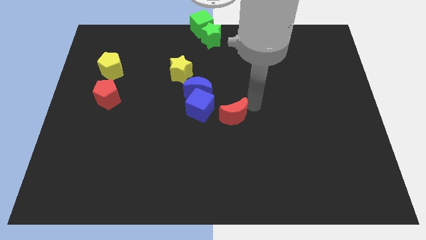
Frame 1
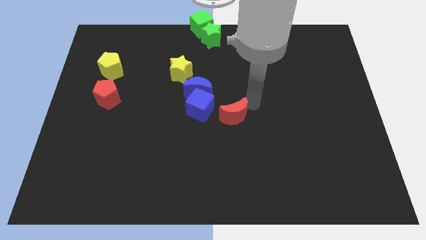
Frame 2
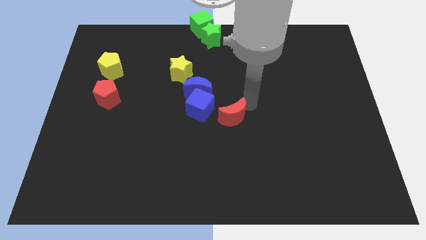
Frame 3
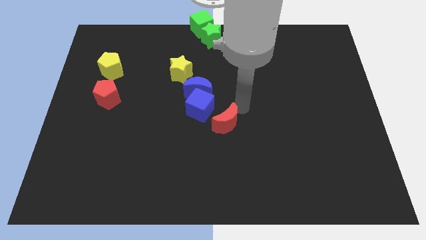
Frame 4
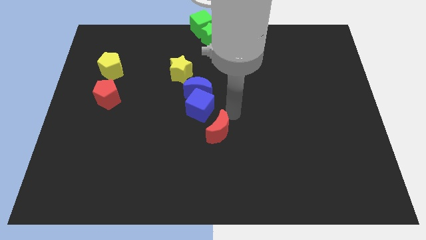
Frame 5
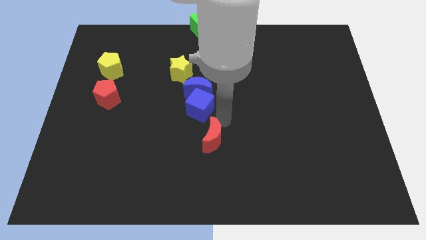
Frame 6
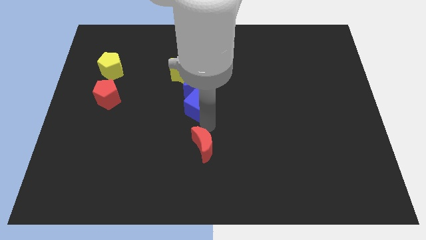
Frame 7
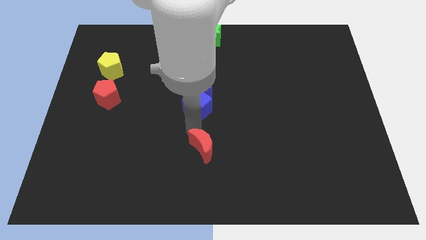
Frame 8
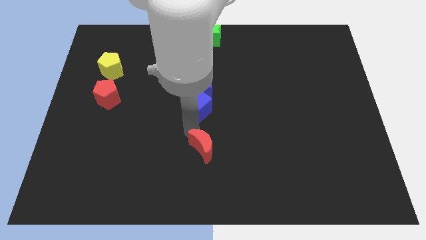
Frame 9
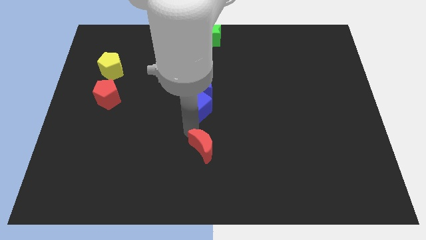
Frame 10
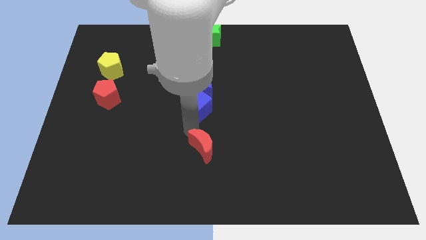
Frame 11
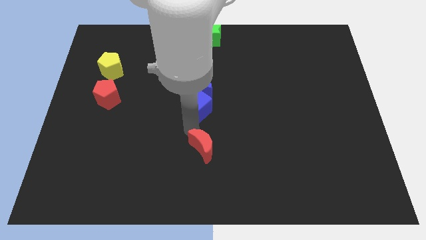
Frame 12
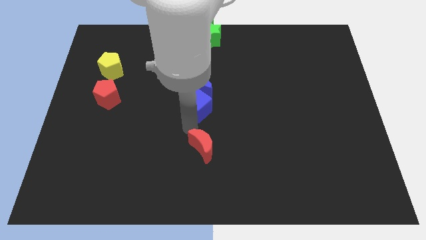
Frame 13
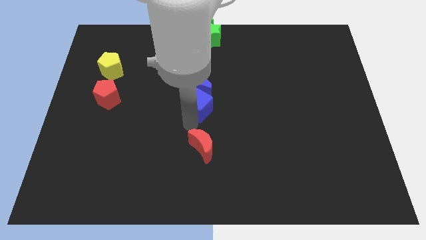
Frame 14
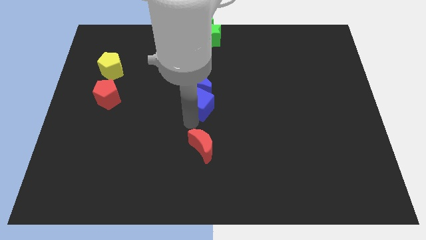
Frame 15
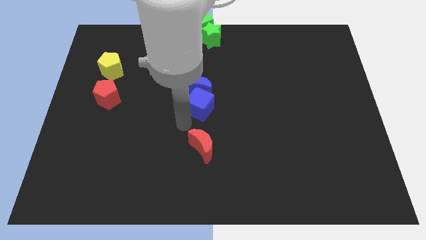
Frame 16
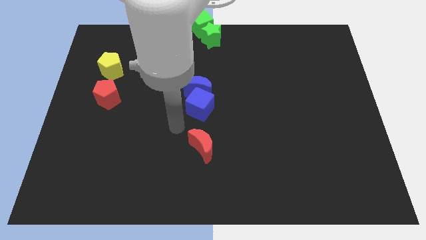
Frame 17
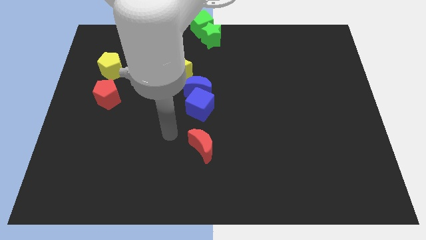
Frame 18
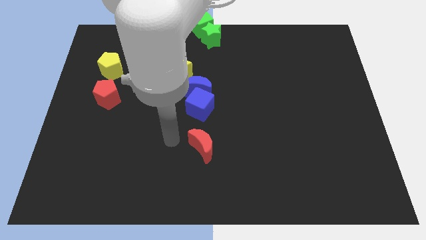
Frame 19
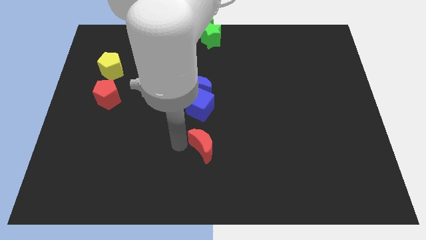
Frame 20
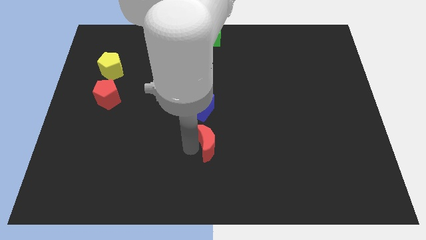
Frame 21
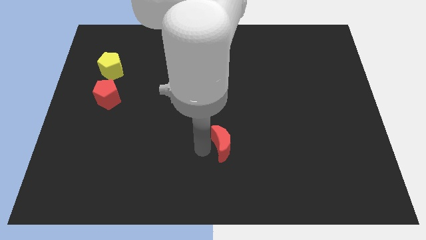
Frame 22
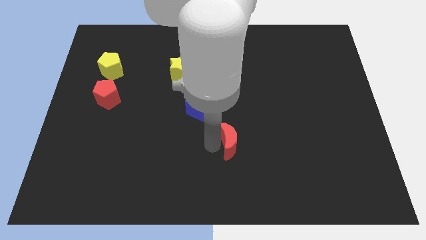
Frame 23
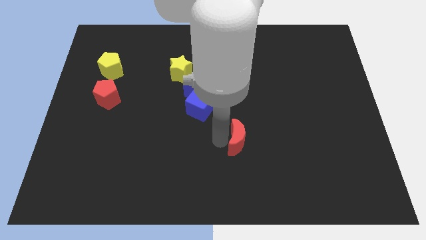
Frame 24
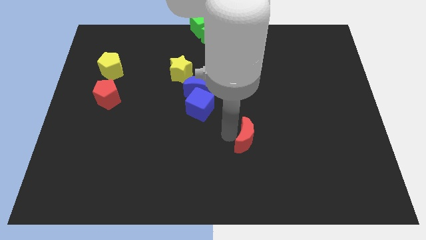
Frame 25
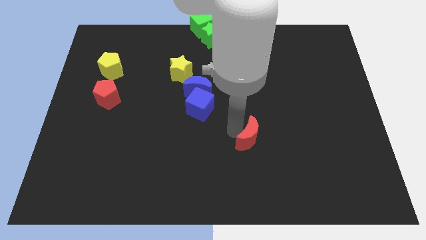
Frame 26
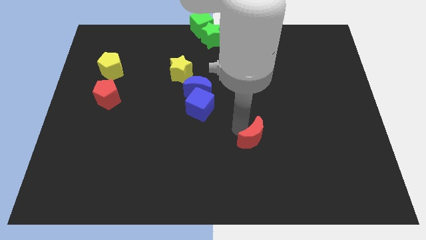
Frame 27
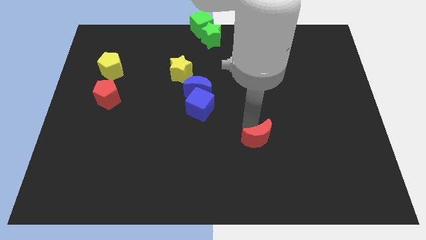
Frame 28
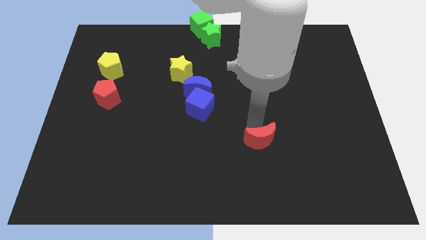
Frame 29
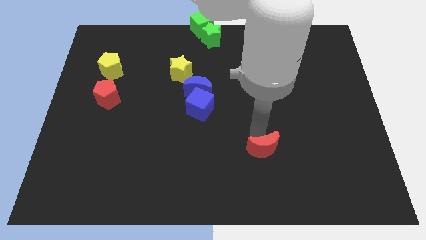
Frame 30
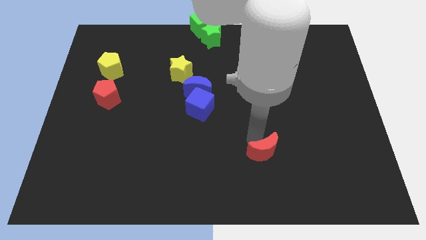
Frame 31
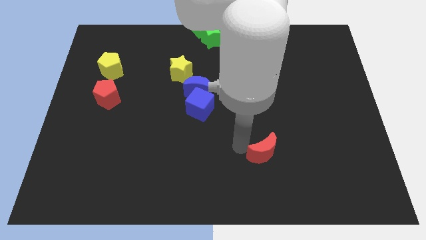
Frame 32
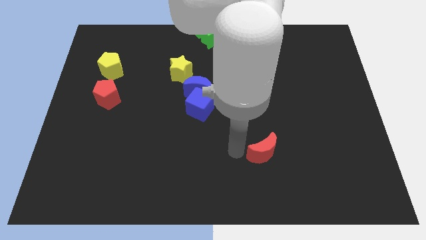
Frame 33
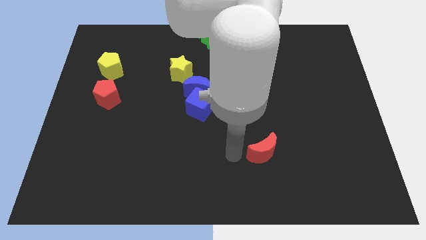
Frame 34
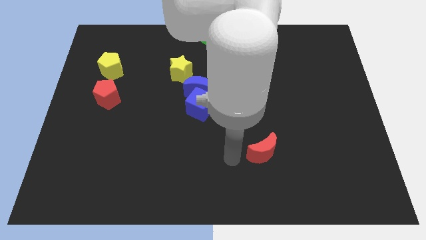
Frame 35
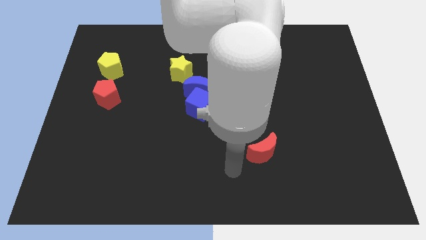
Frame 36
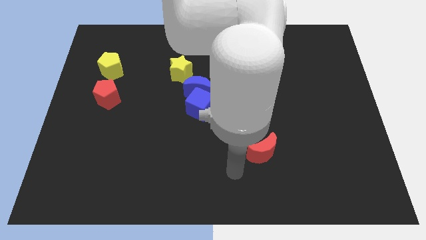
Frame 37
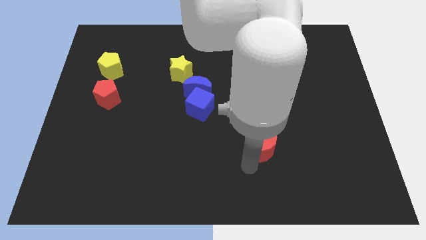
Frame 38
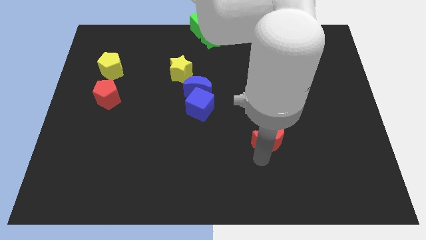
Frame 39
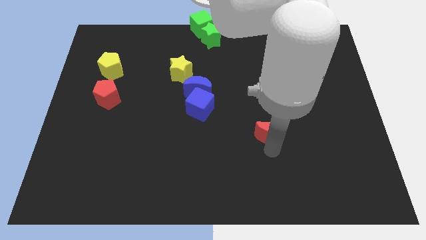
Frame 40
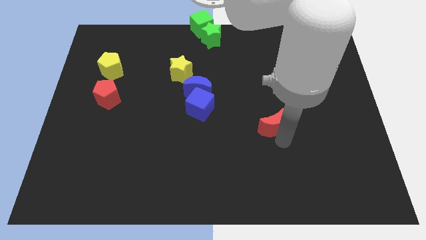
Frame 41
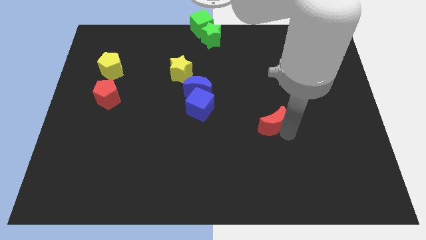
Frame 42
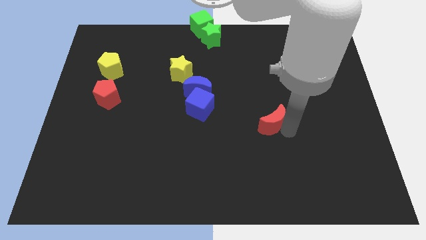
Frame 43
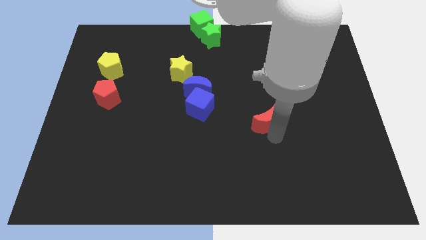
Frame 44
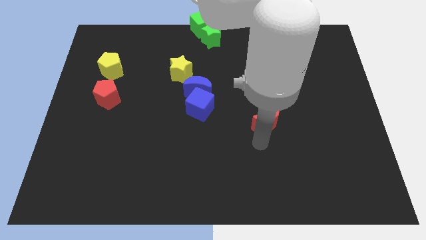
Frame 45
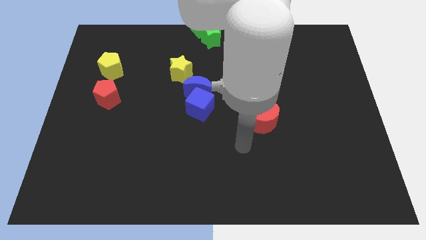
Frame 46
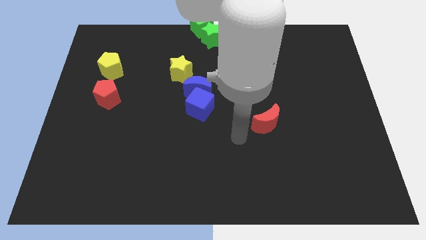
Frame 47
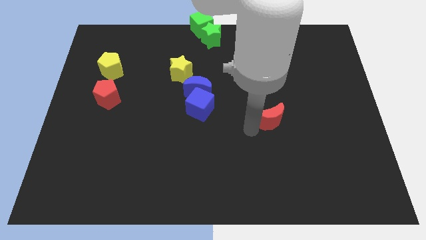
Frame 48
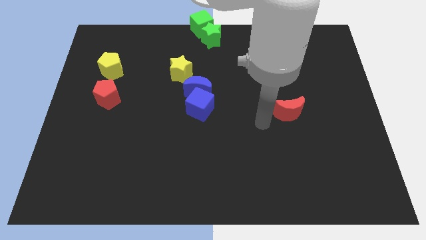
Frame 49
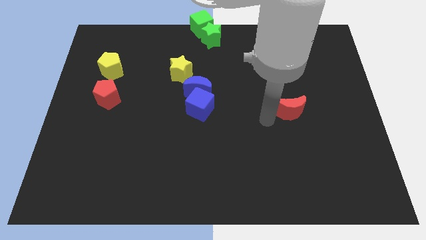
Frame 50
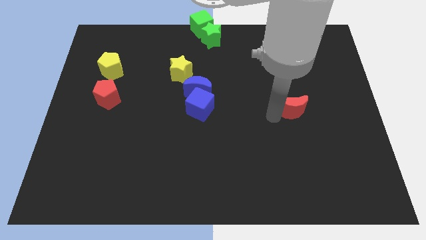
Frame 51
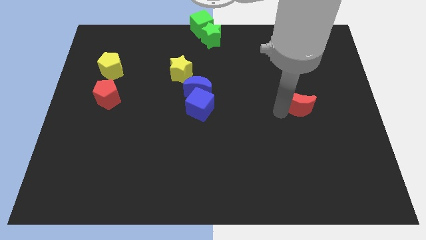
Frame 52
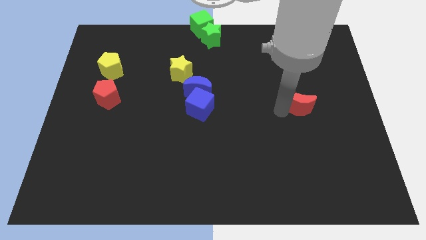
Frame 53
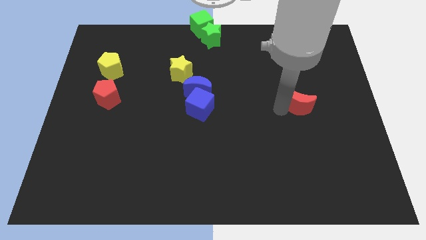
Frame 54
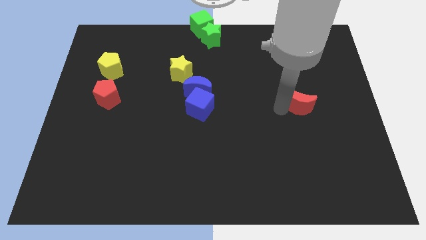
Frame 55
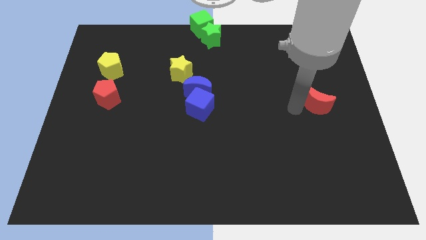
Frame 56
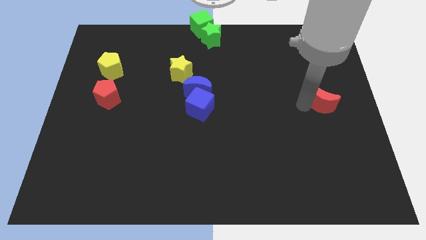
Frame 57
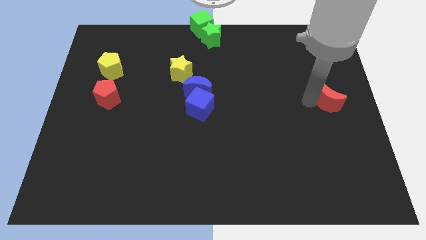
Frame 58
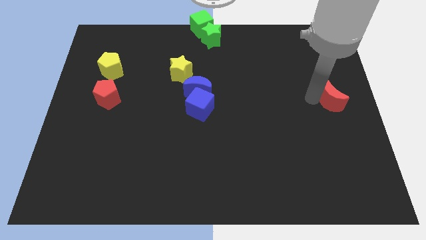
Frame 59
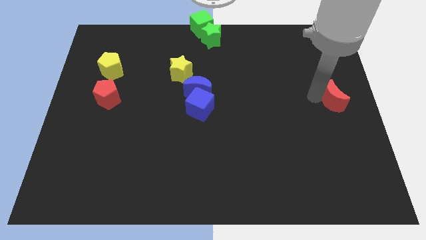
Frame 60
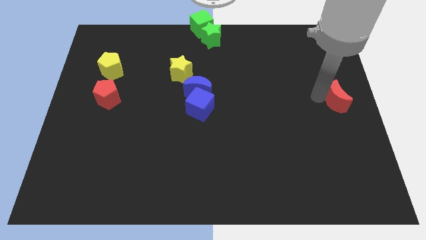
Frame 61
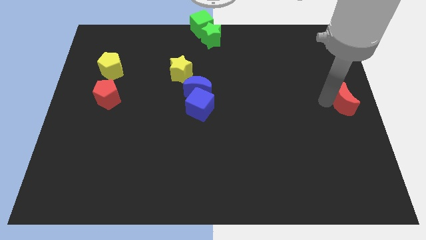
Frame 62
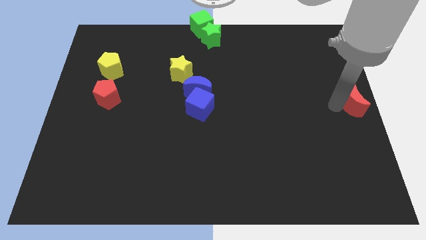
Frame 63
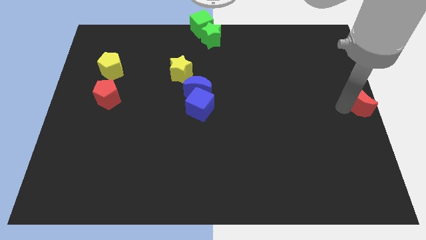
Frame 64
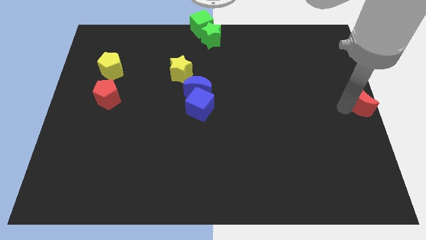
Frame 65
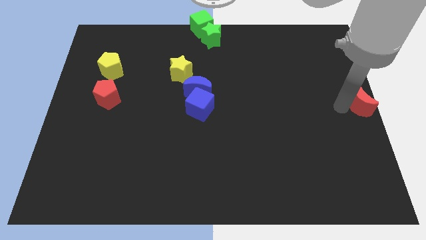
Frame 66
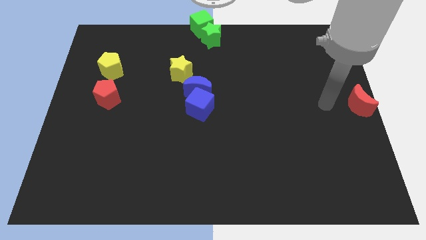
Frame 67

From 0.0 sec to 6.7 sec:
push the red crescent to the center right of the board

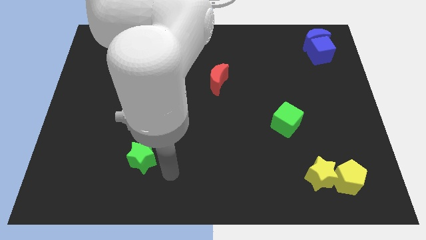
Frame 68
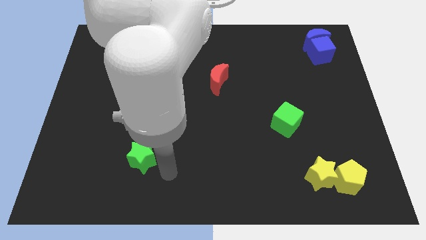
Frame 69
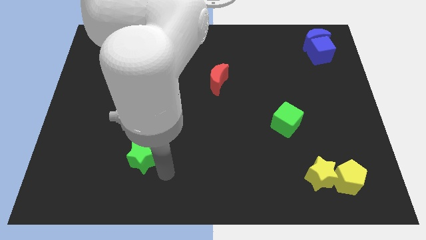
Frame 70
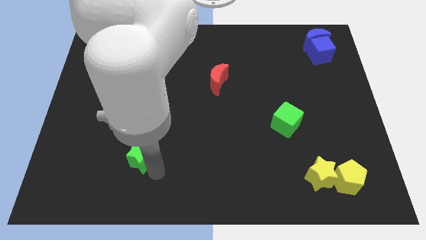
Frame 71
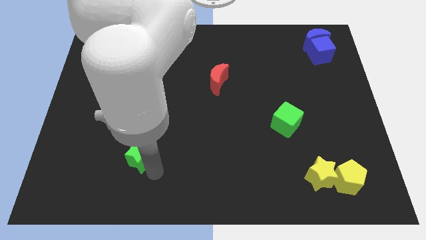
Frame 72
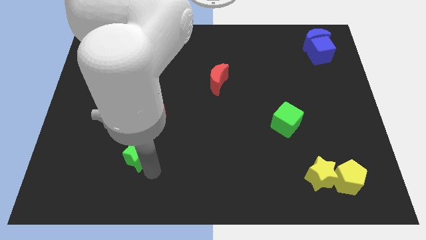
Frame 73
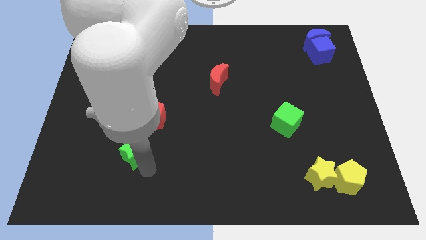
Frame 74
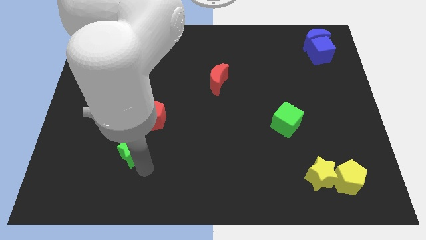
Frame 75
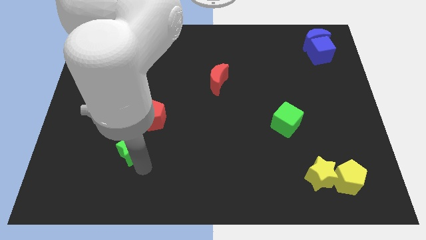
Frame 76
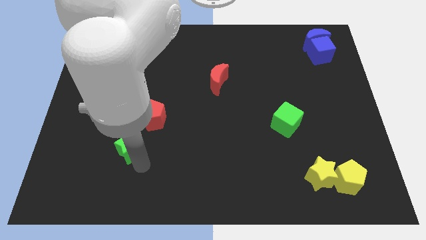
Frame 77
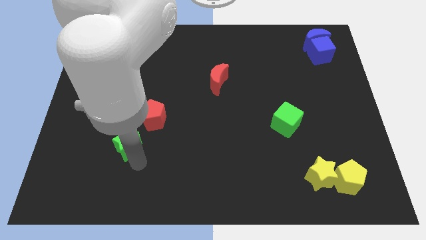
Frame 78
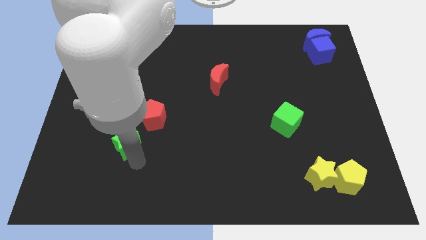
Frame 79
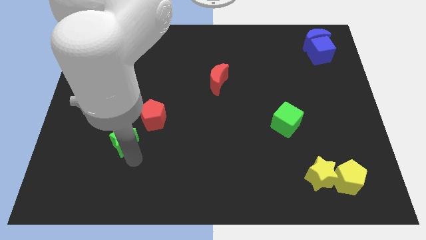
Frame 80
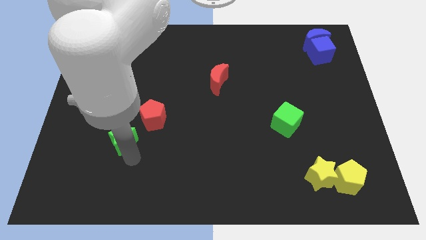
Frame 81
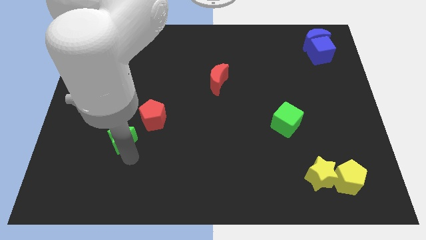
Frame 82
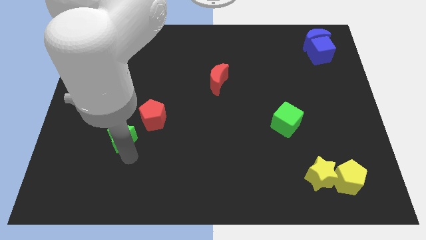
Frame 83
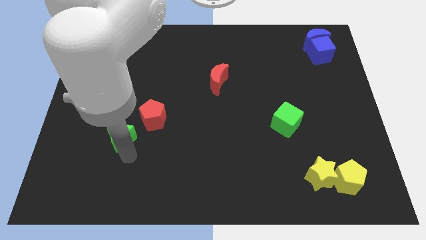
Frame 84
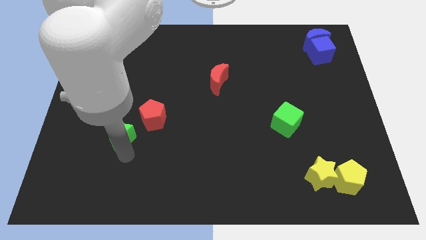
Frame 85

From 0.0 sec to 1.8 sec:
move the green star to the bottom left of the red pentagon

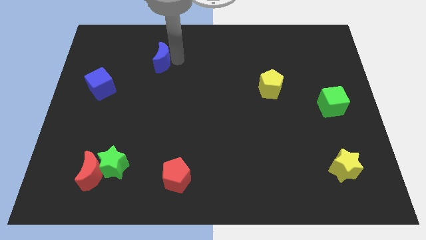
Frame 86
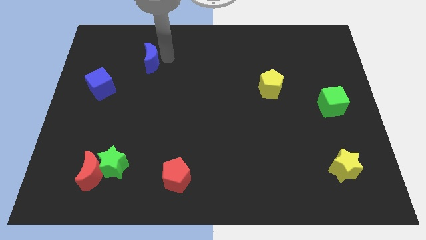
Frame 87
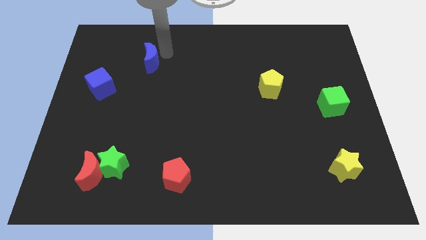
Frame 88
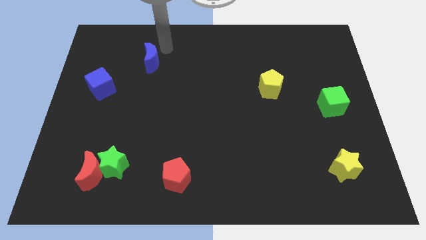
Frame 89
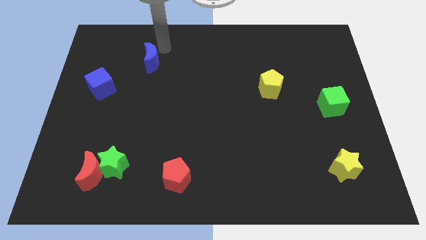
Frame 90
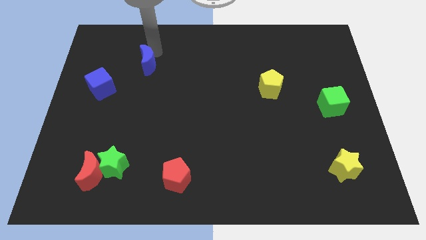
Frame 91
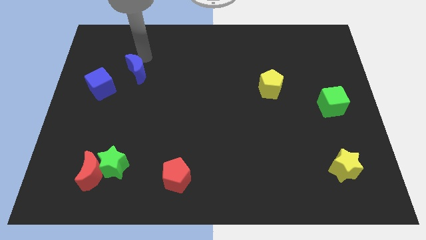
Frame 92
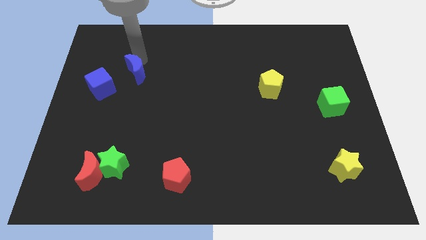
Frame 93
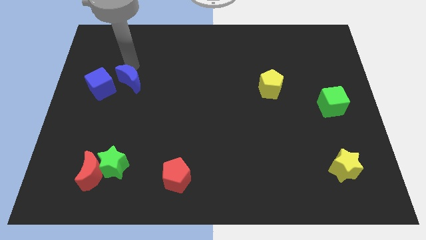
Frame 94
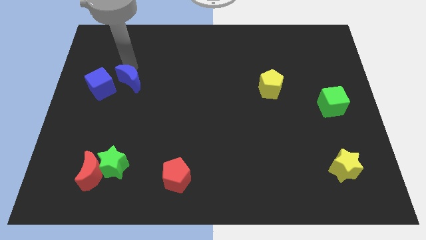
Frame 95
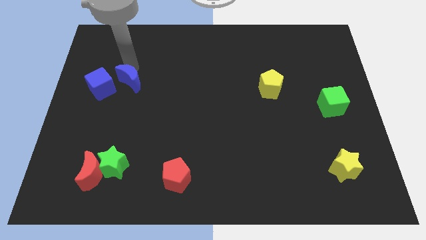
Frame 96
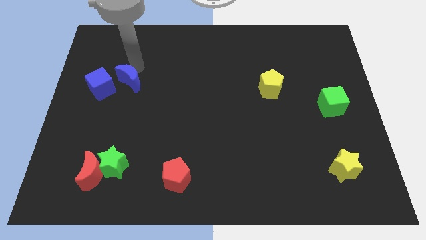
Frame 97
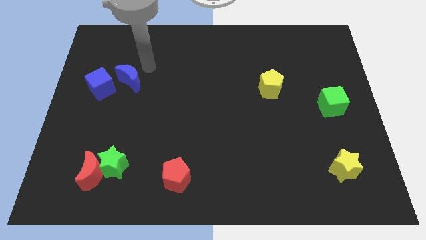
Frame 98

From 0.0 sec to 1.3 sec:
place the blue block close to the blue cube
